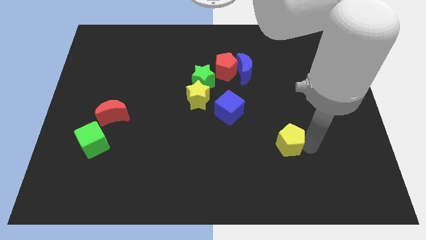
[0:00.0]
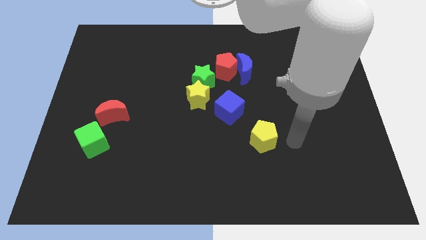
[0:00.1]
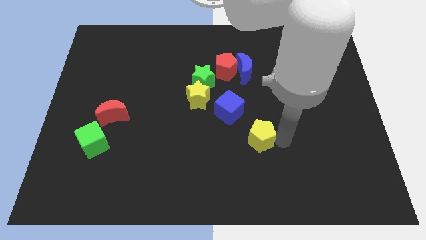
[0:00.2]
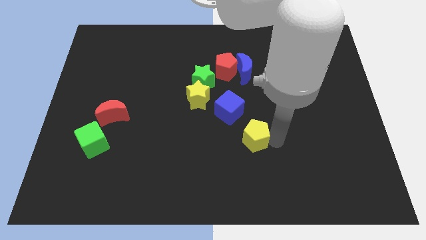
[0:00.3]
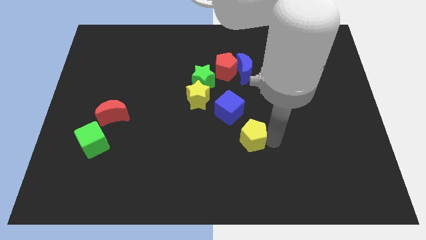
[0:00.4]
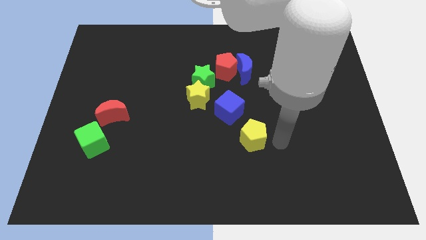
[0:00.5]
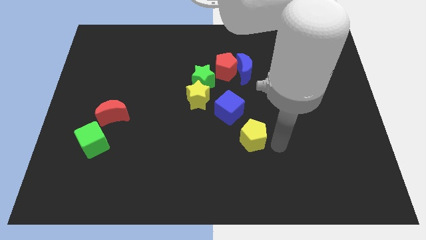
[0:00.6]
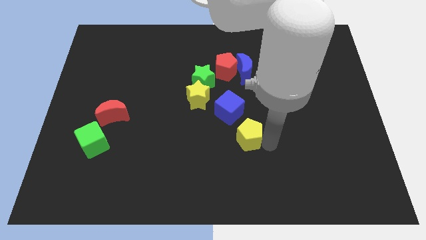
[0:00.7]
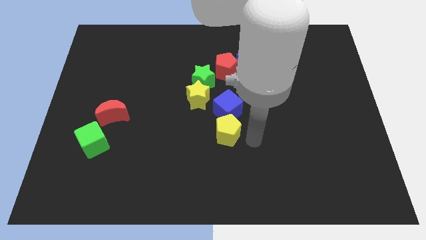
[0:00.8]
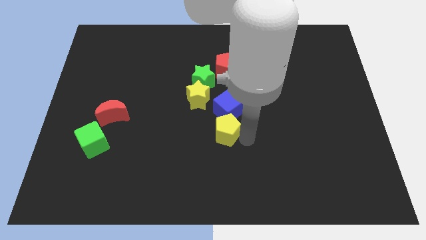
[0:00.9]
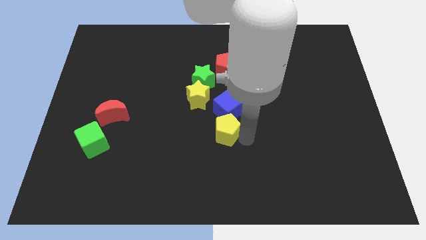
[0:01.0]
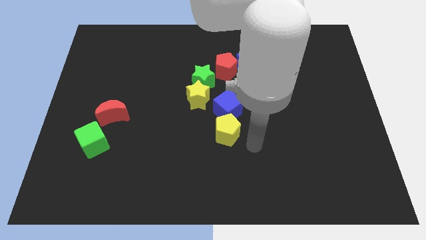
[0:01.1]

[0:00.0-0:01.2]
place the yellow pentagon to the bottom of the blue cube

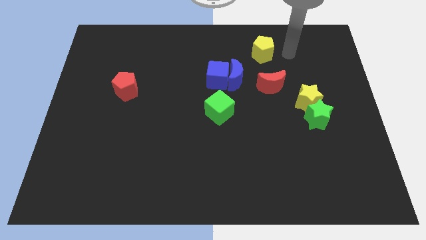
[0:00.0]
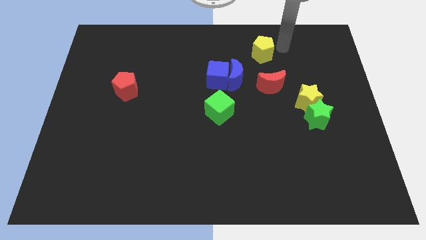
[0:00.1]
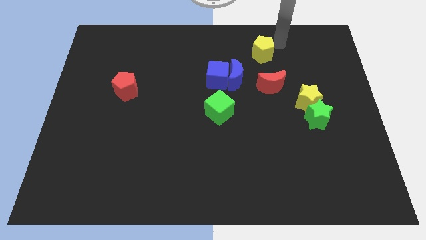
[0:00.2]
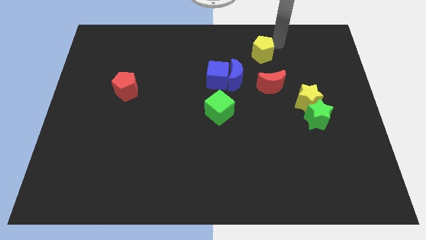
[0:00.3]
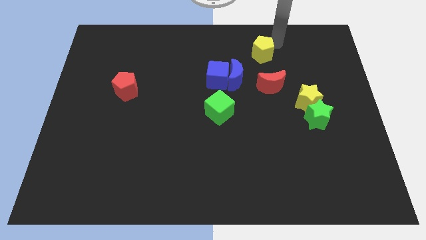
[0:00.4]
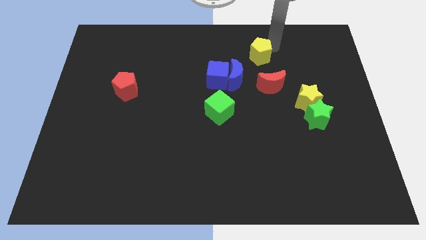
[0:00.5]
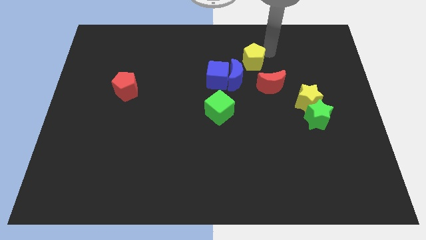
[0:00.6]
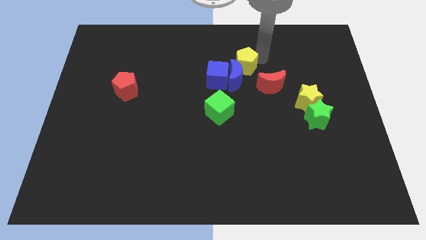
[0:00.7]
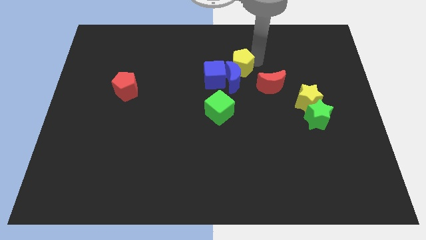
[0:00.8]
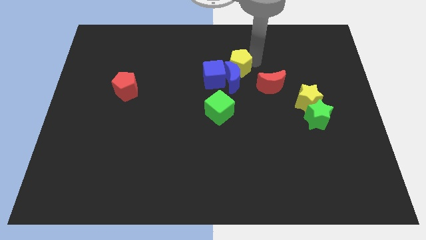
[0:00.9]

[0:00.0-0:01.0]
push yellow pentagon into blue moon

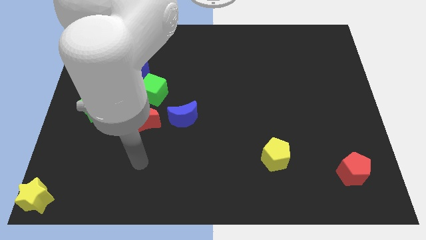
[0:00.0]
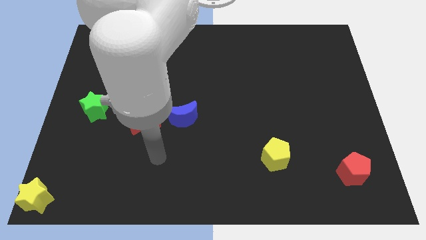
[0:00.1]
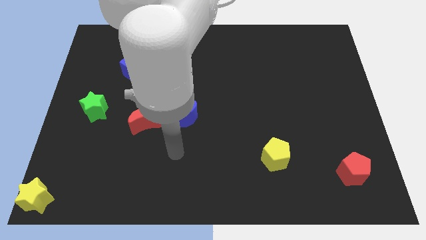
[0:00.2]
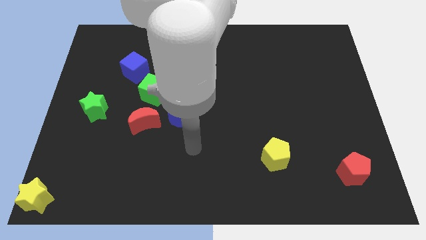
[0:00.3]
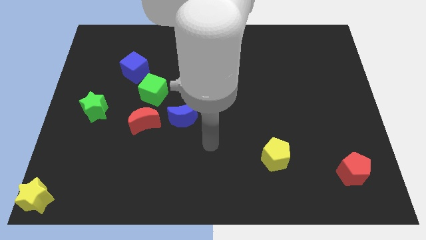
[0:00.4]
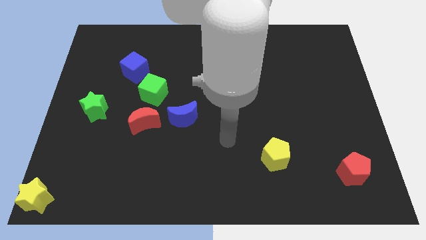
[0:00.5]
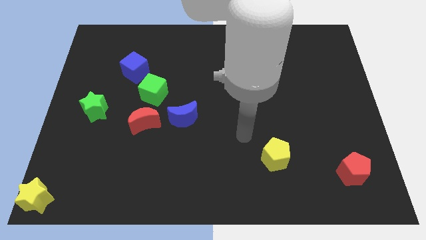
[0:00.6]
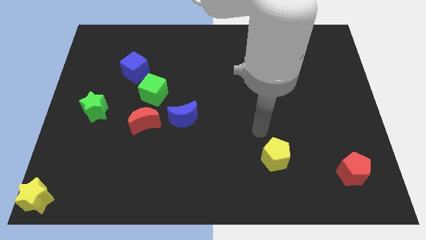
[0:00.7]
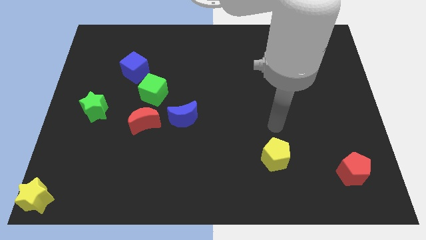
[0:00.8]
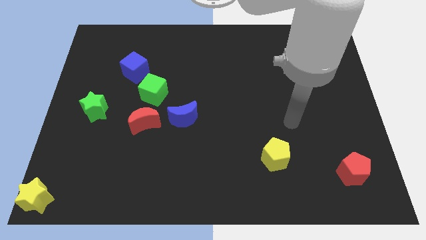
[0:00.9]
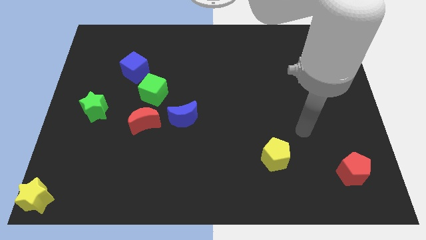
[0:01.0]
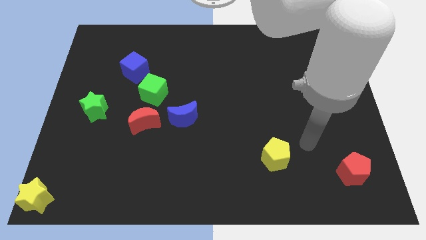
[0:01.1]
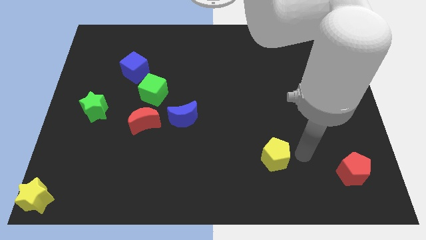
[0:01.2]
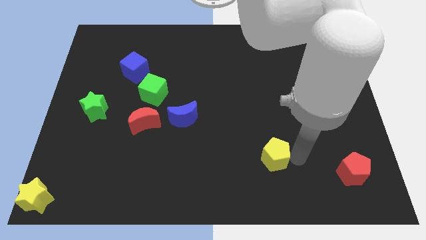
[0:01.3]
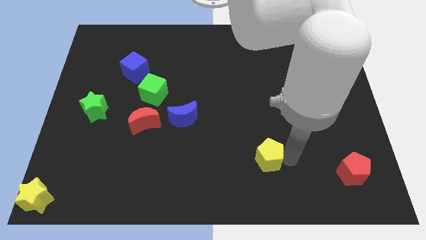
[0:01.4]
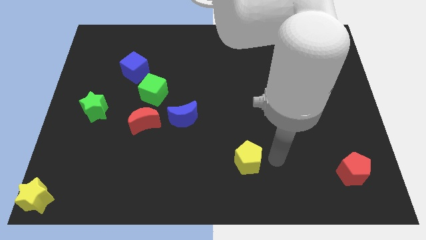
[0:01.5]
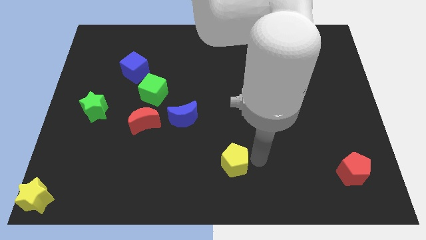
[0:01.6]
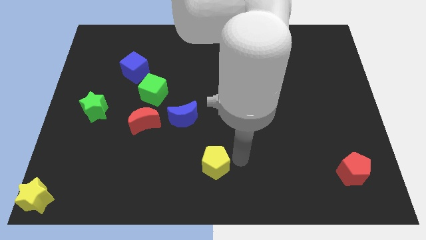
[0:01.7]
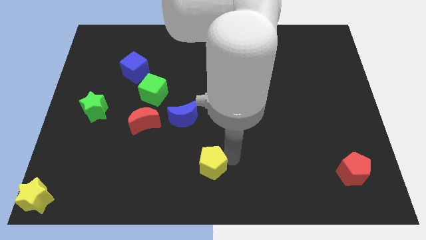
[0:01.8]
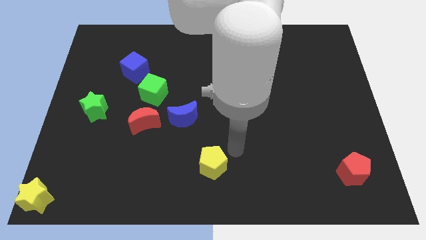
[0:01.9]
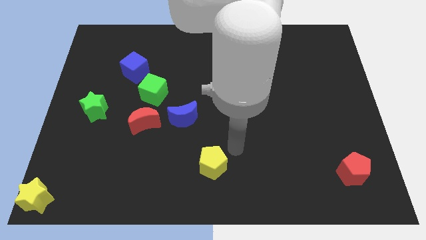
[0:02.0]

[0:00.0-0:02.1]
push the yellow pentagon to the bottom left diagonal of the blue moon

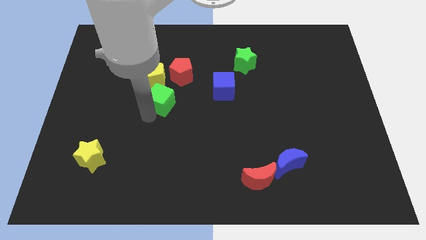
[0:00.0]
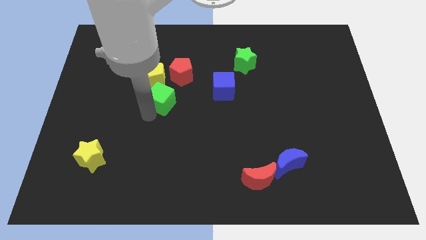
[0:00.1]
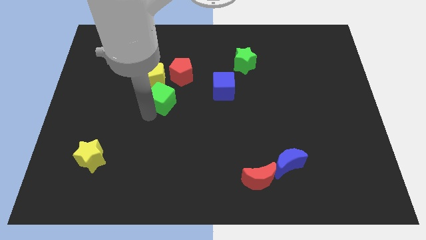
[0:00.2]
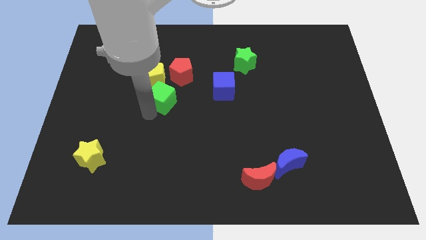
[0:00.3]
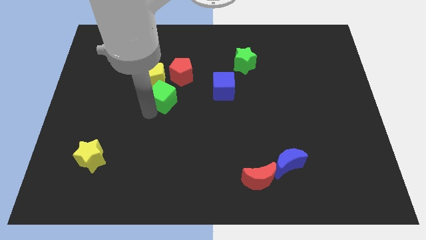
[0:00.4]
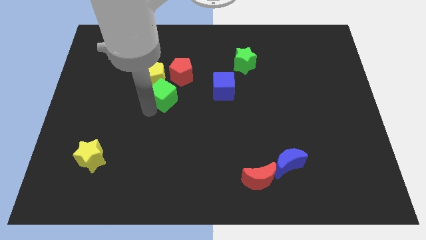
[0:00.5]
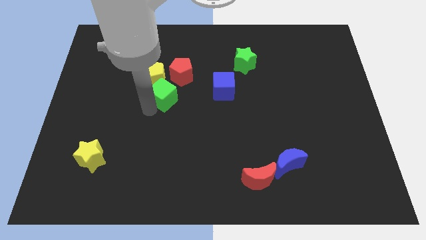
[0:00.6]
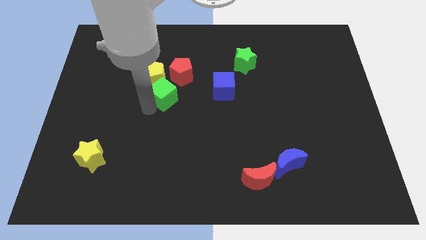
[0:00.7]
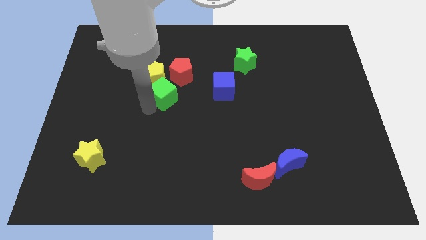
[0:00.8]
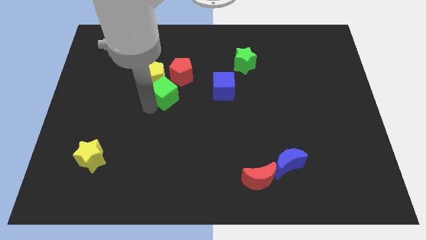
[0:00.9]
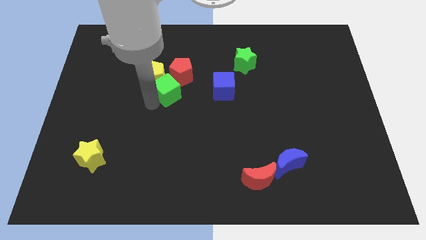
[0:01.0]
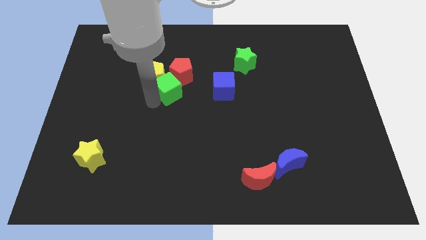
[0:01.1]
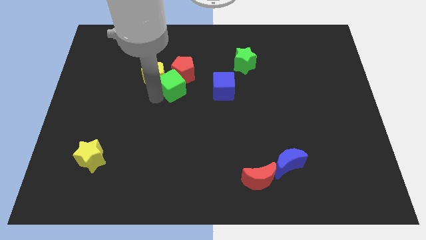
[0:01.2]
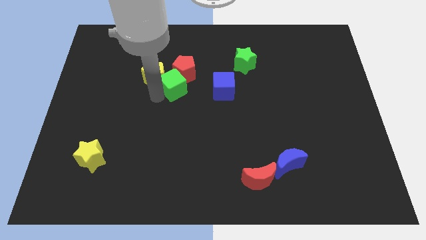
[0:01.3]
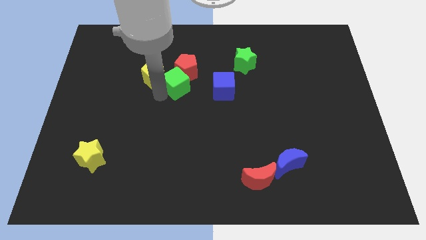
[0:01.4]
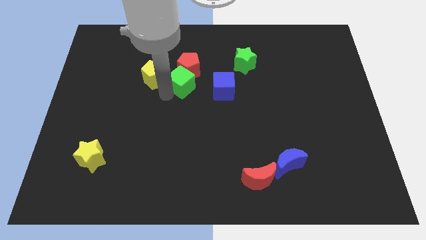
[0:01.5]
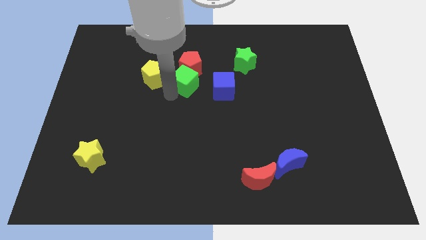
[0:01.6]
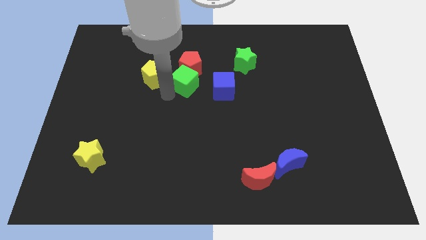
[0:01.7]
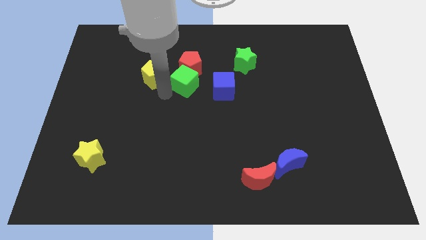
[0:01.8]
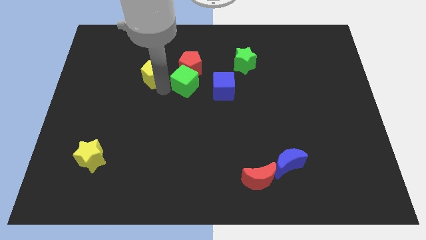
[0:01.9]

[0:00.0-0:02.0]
place the green cube in between the blue cube and yellow pentagon

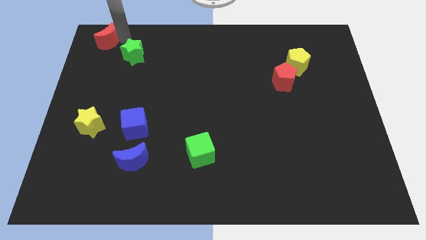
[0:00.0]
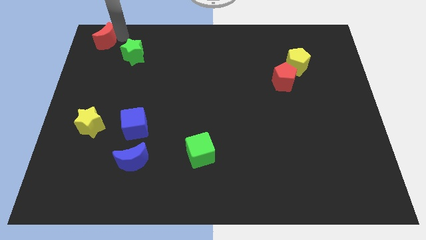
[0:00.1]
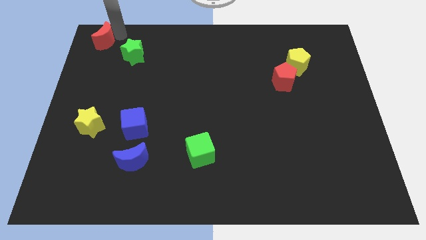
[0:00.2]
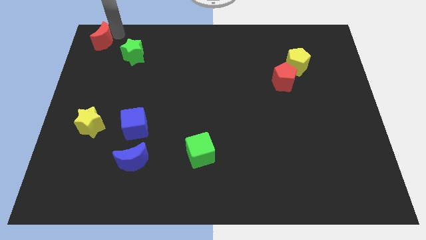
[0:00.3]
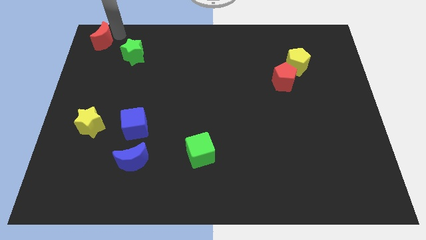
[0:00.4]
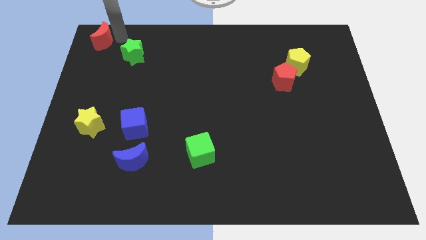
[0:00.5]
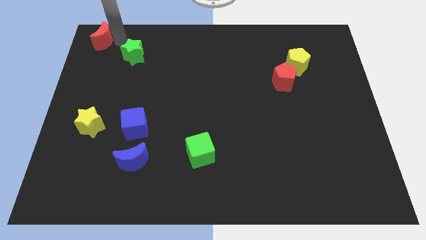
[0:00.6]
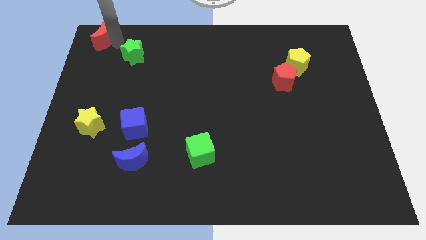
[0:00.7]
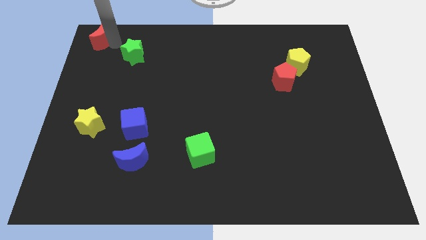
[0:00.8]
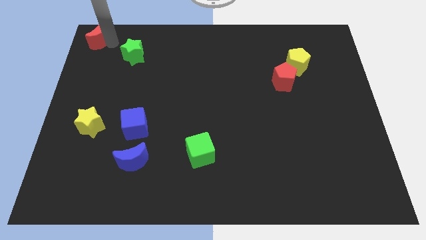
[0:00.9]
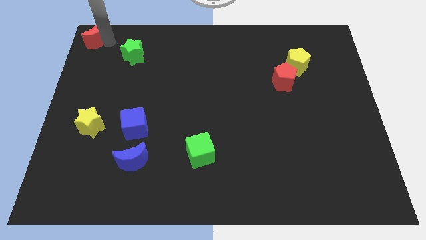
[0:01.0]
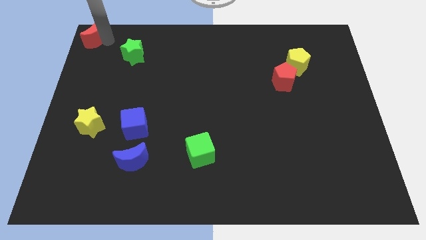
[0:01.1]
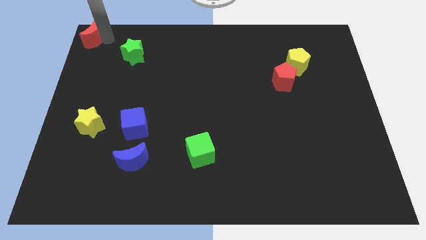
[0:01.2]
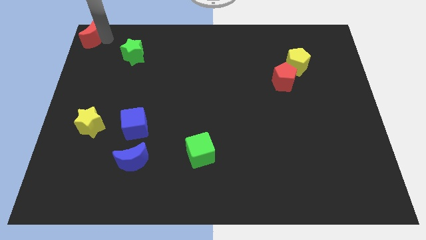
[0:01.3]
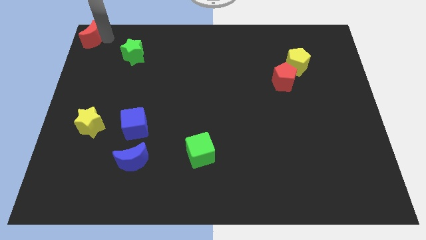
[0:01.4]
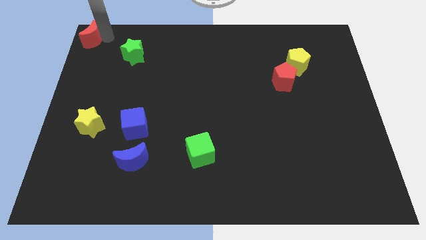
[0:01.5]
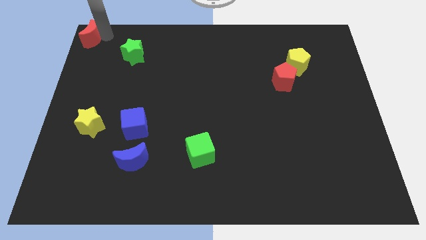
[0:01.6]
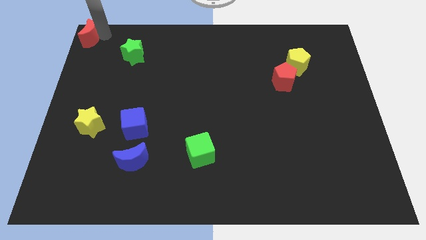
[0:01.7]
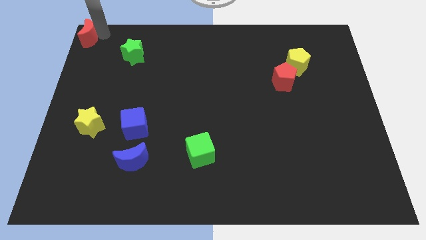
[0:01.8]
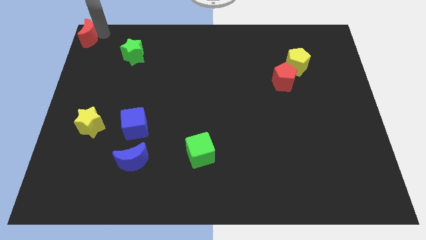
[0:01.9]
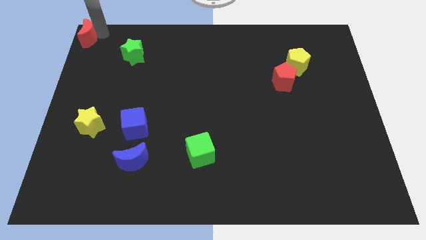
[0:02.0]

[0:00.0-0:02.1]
move the red crescent to the top left corner

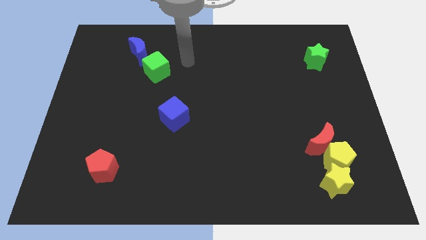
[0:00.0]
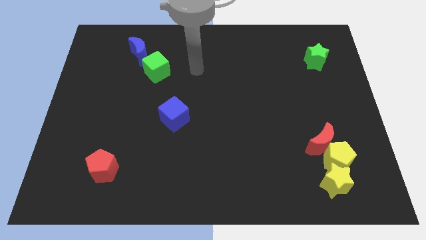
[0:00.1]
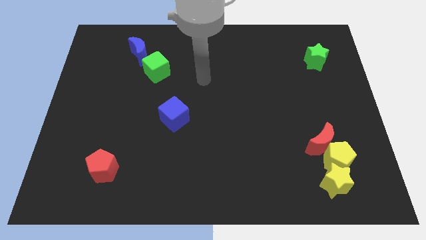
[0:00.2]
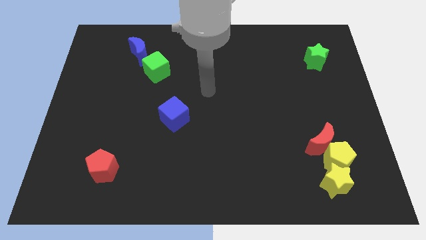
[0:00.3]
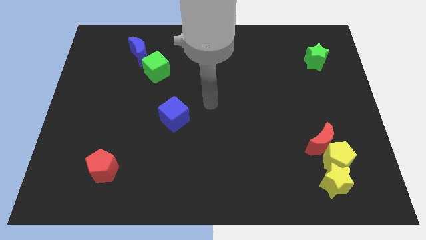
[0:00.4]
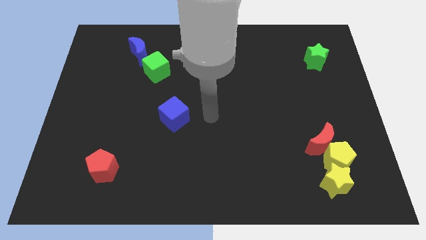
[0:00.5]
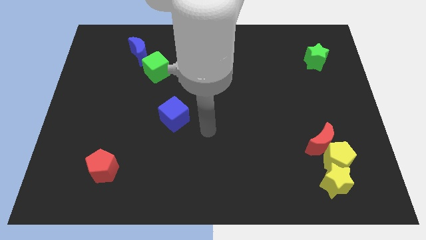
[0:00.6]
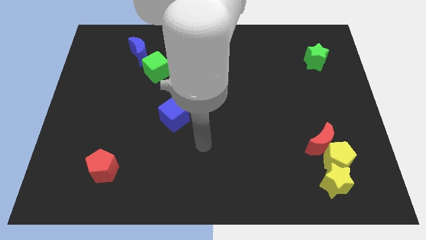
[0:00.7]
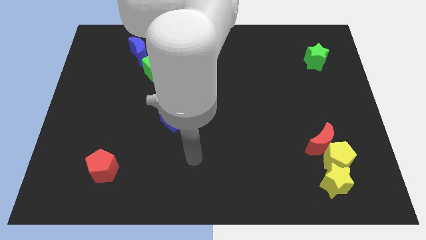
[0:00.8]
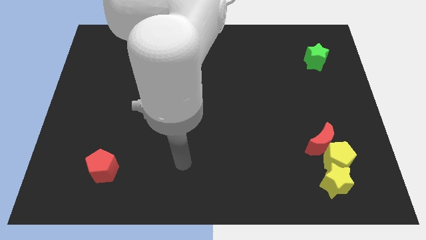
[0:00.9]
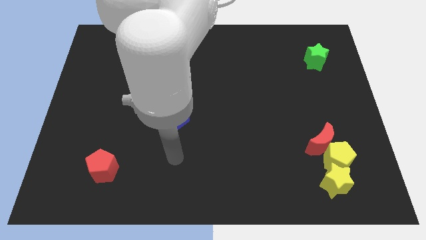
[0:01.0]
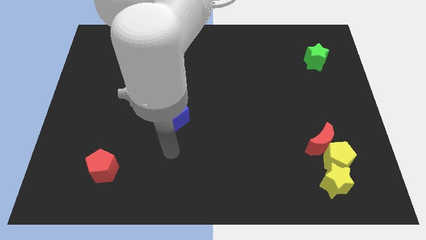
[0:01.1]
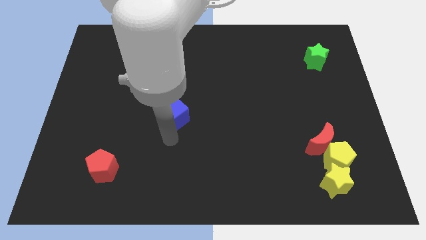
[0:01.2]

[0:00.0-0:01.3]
point your arm at the bottom side of the blue cube
